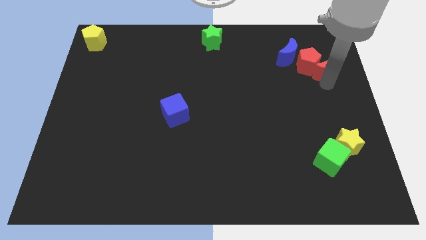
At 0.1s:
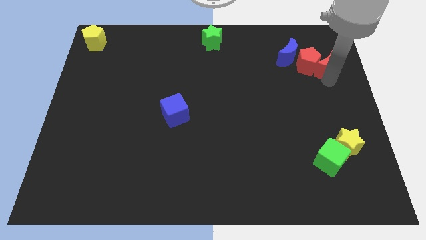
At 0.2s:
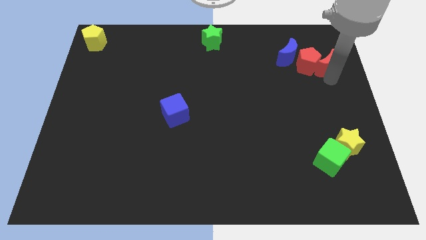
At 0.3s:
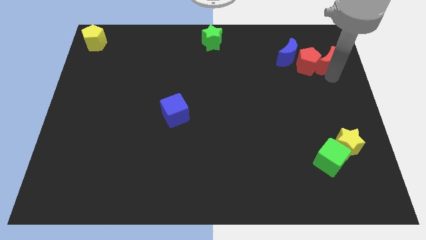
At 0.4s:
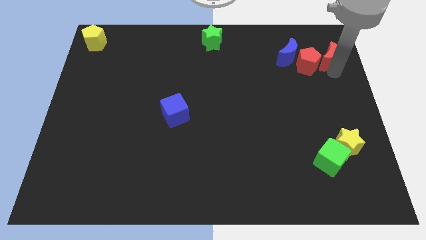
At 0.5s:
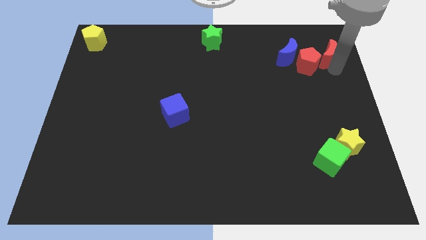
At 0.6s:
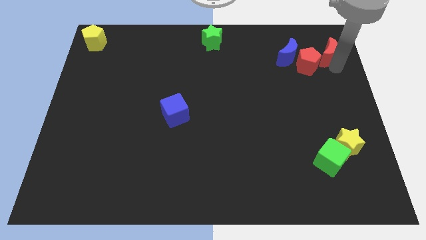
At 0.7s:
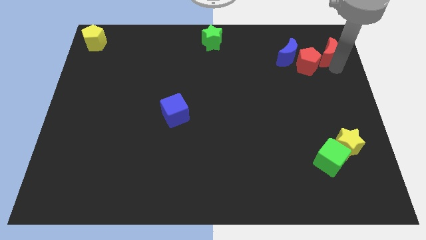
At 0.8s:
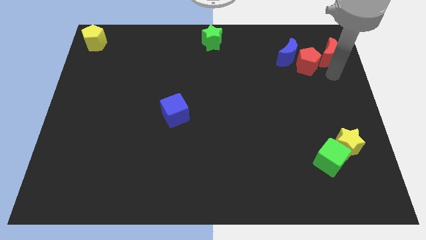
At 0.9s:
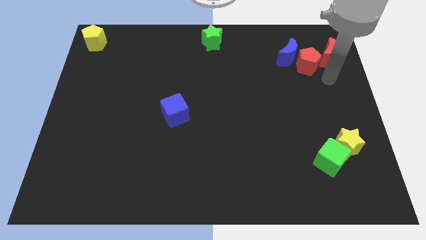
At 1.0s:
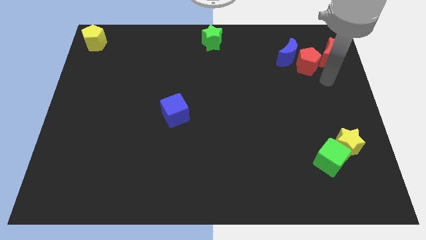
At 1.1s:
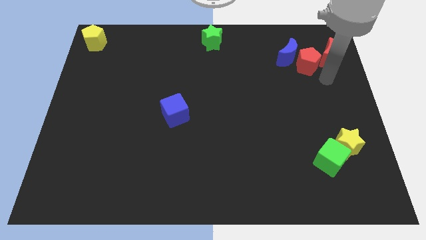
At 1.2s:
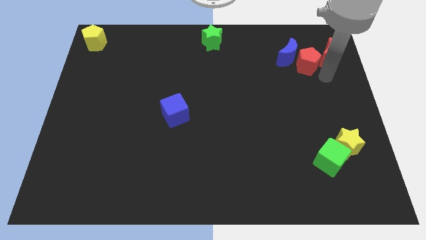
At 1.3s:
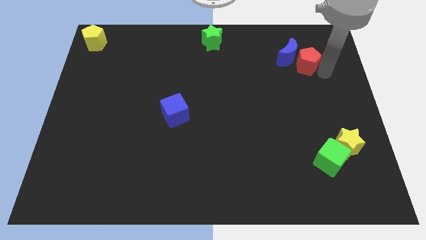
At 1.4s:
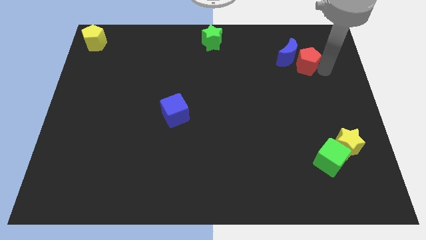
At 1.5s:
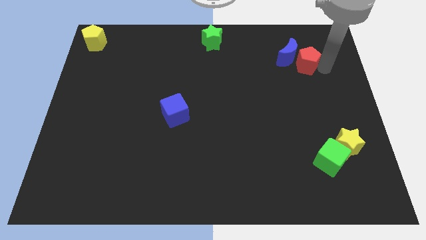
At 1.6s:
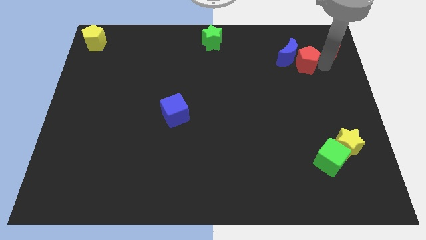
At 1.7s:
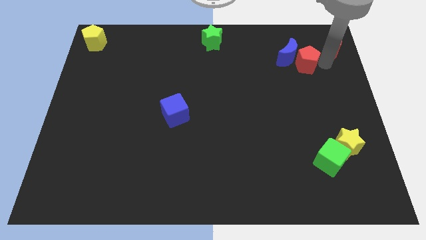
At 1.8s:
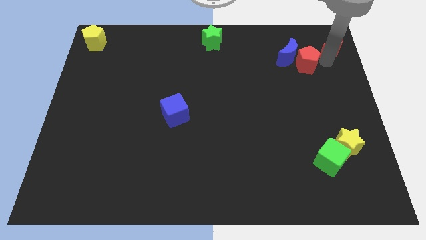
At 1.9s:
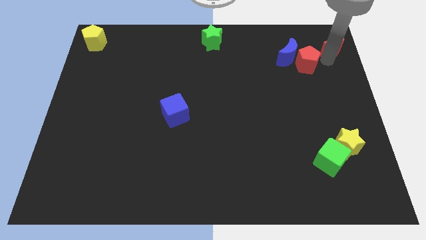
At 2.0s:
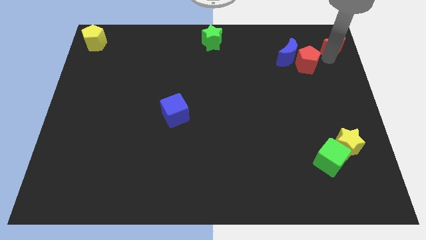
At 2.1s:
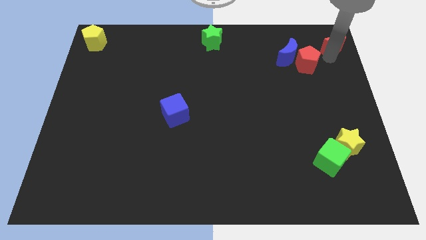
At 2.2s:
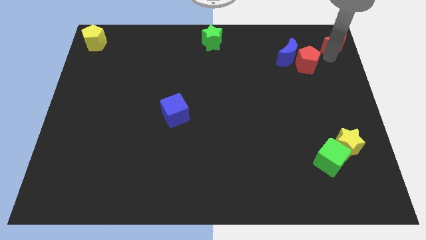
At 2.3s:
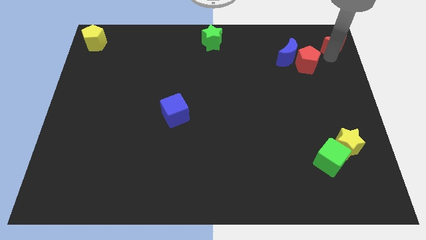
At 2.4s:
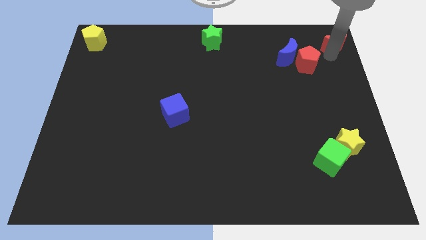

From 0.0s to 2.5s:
move red crescent towards the top right corner of the board

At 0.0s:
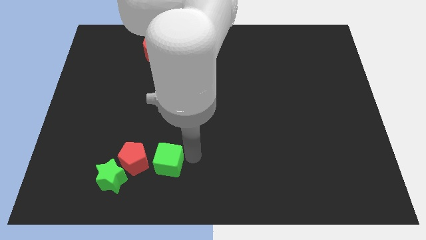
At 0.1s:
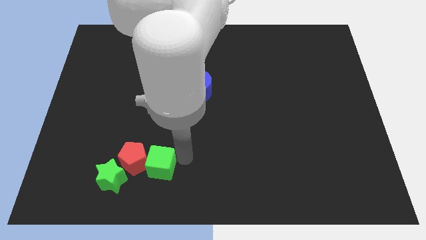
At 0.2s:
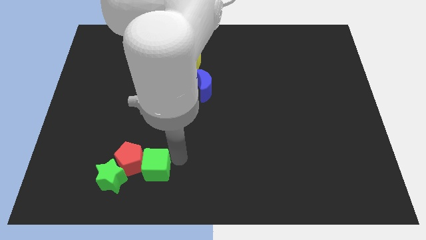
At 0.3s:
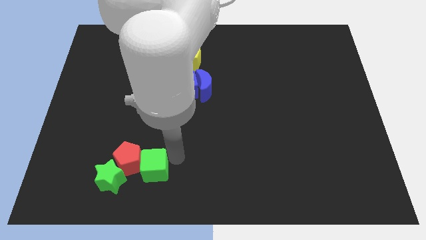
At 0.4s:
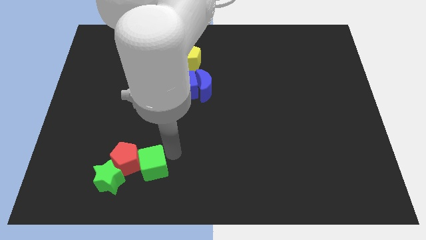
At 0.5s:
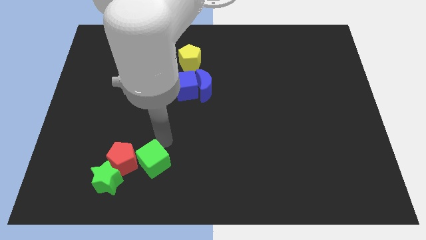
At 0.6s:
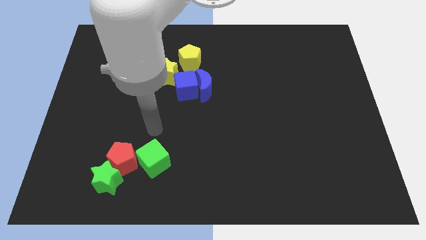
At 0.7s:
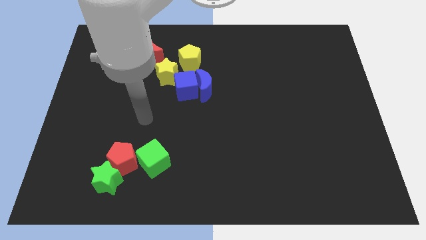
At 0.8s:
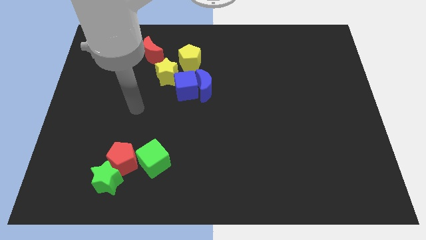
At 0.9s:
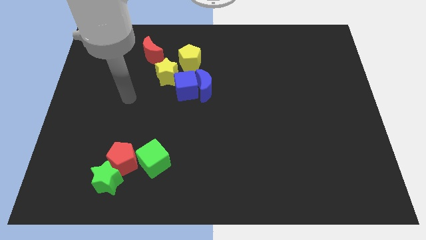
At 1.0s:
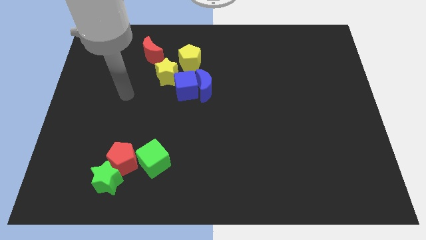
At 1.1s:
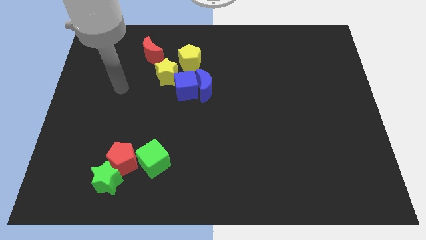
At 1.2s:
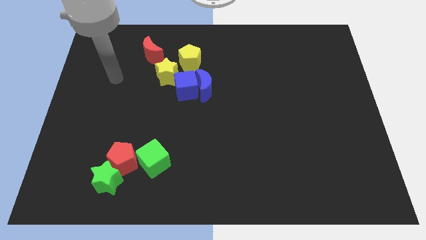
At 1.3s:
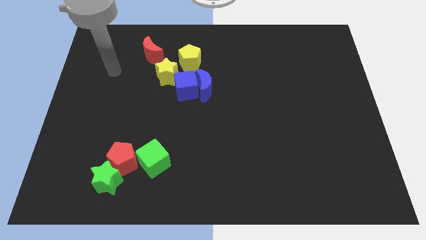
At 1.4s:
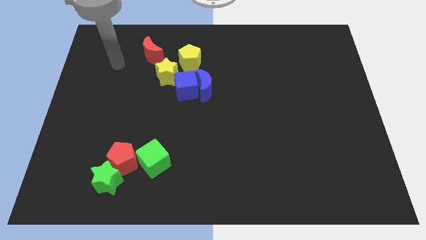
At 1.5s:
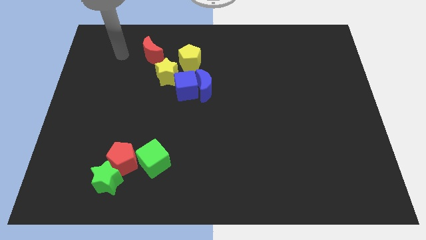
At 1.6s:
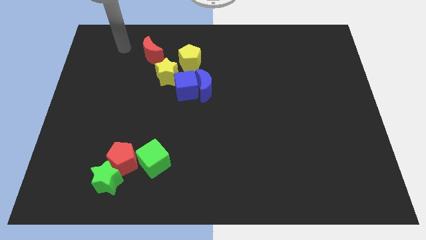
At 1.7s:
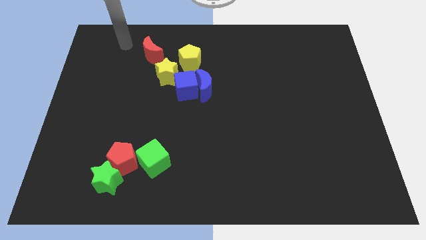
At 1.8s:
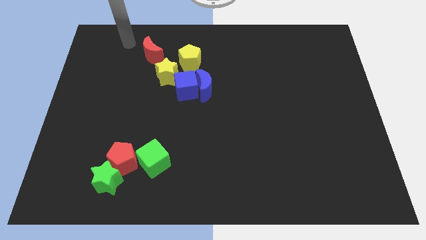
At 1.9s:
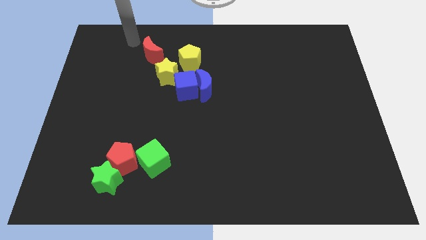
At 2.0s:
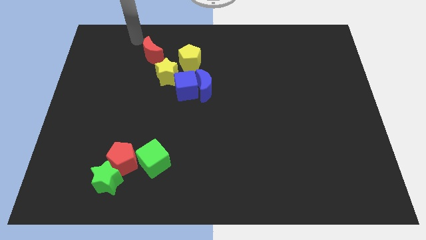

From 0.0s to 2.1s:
move the green cube into the red pentagon

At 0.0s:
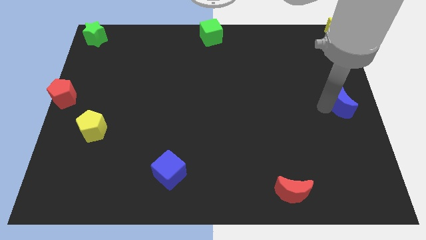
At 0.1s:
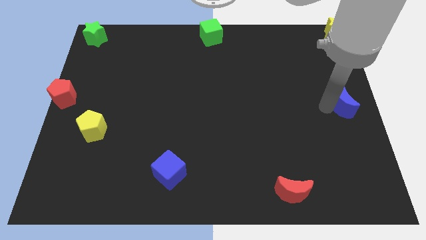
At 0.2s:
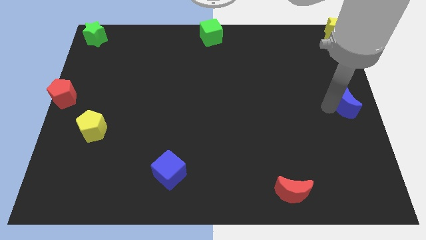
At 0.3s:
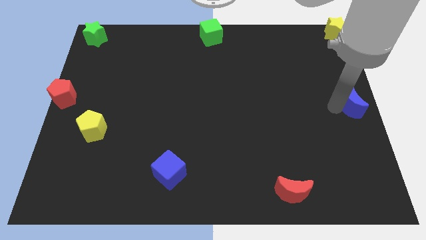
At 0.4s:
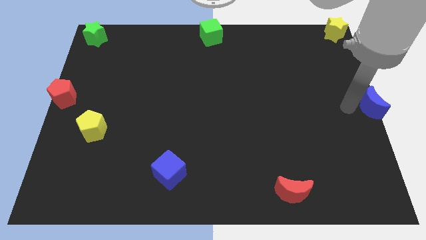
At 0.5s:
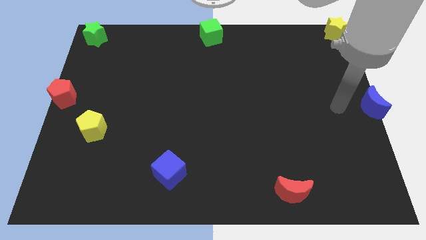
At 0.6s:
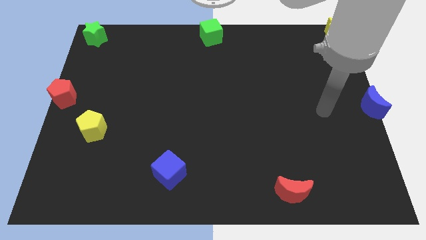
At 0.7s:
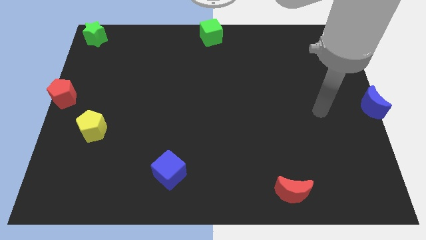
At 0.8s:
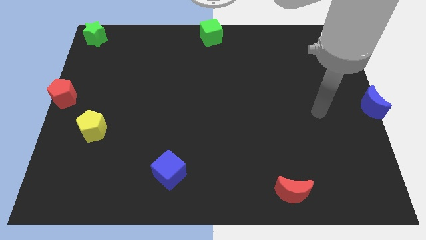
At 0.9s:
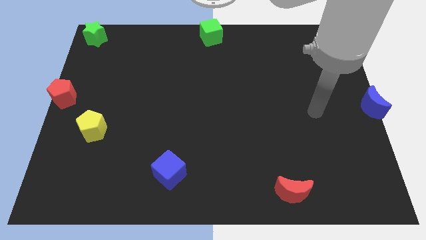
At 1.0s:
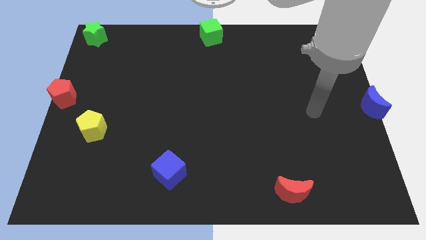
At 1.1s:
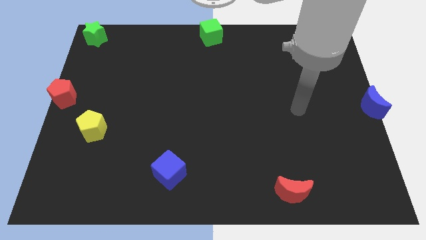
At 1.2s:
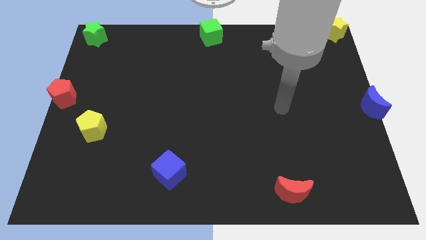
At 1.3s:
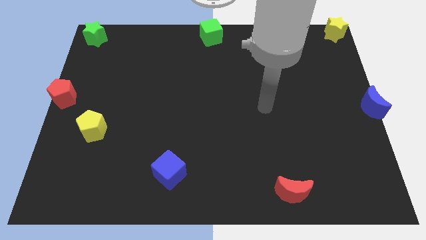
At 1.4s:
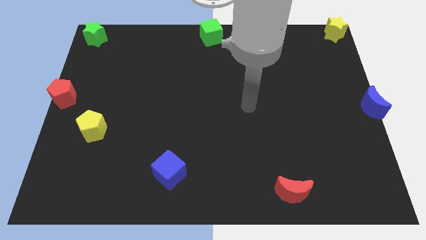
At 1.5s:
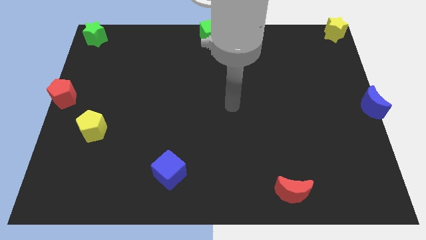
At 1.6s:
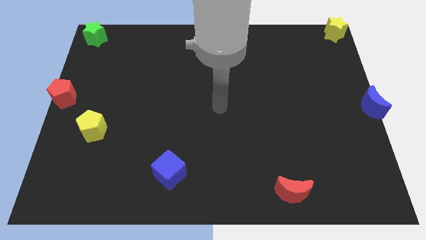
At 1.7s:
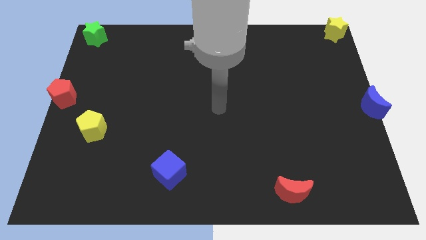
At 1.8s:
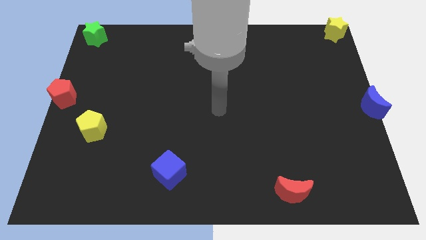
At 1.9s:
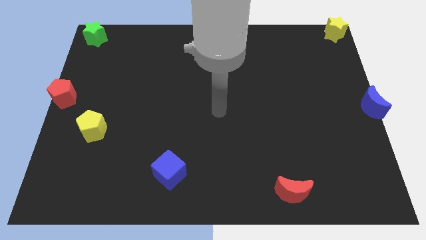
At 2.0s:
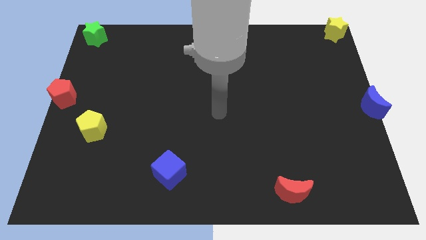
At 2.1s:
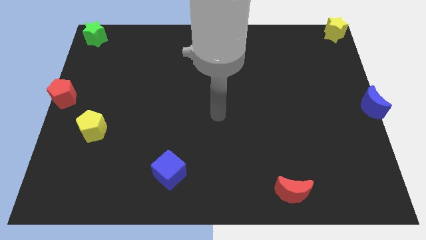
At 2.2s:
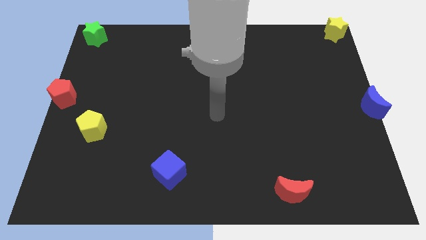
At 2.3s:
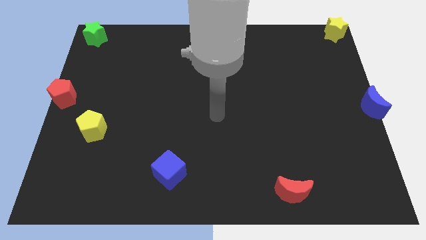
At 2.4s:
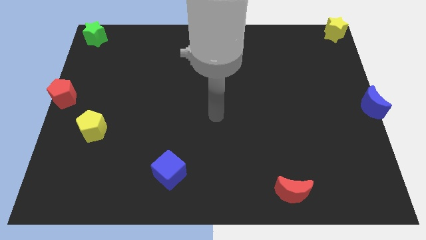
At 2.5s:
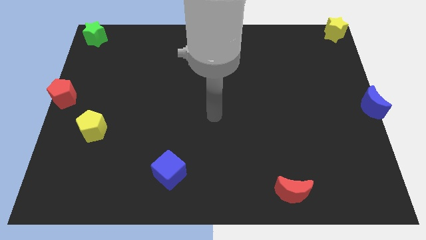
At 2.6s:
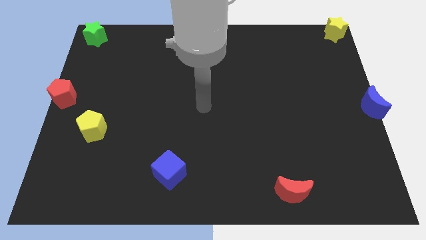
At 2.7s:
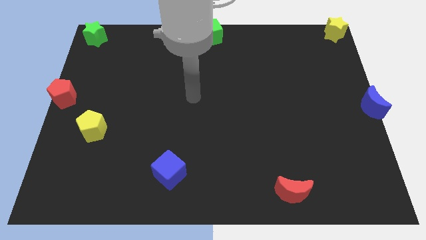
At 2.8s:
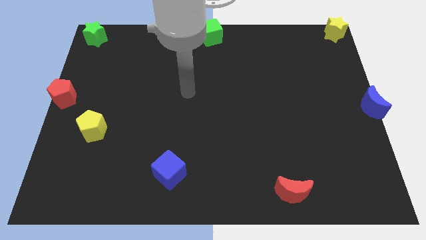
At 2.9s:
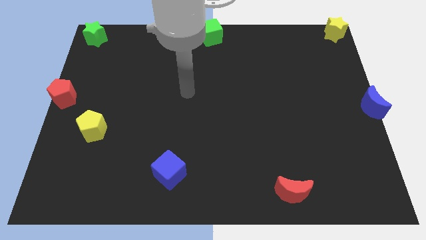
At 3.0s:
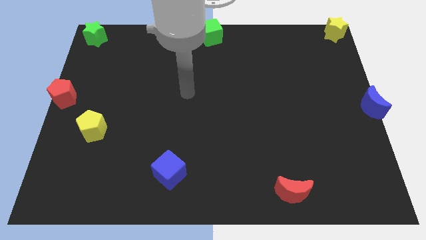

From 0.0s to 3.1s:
place the blue moon at the center right corner

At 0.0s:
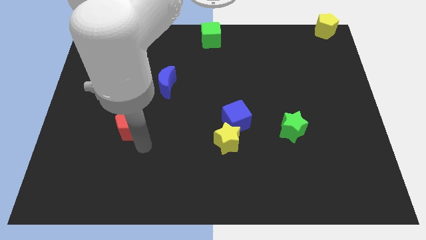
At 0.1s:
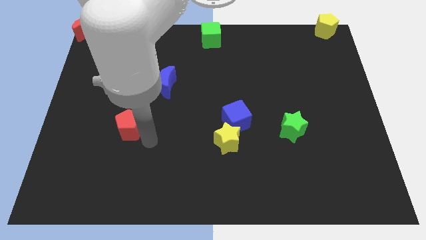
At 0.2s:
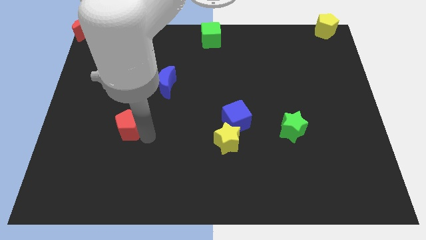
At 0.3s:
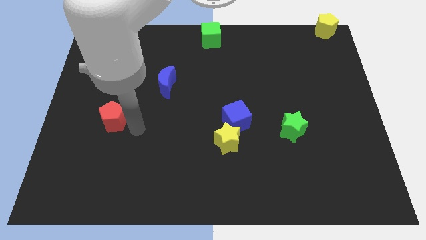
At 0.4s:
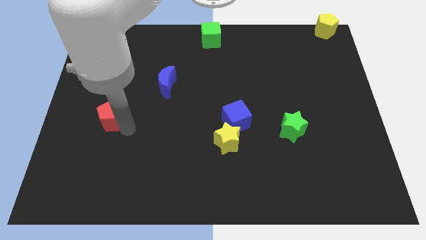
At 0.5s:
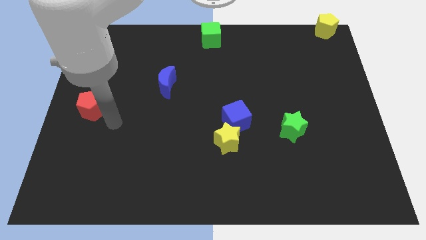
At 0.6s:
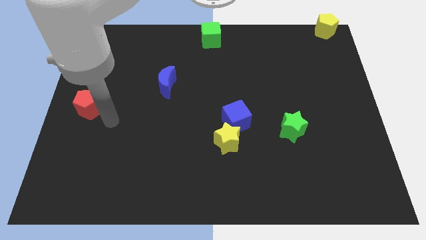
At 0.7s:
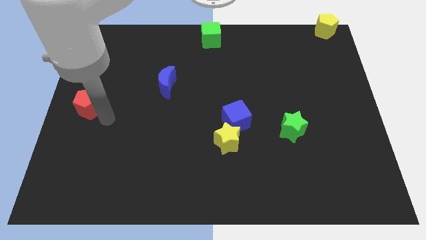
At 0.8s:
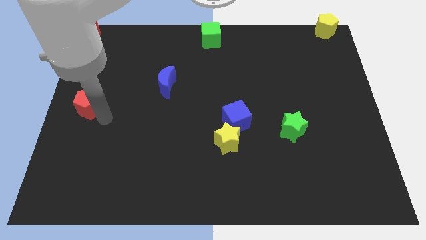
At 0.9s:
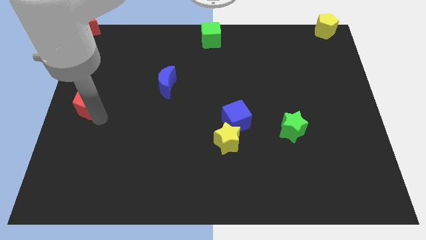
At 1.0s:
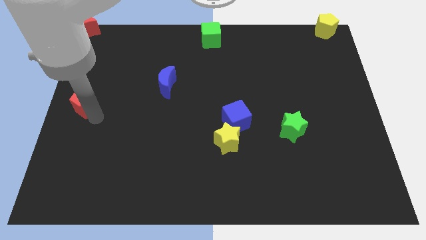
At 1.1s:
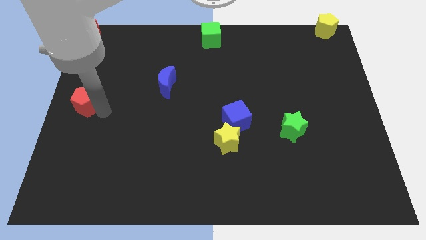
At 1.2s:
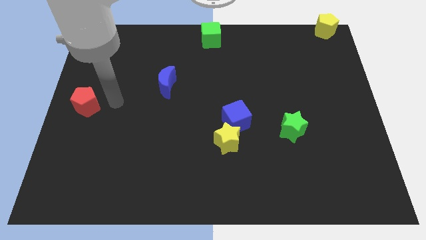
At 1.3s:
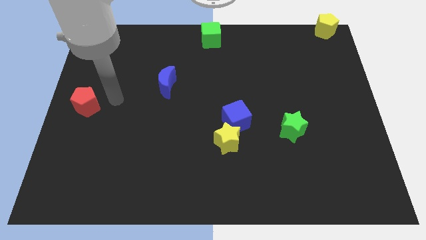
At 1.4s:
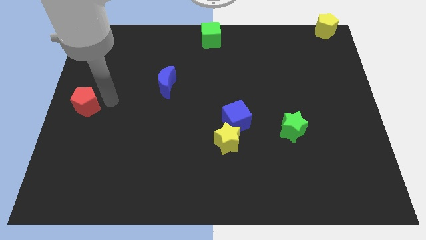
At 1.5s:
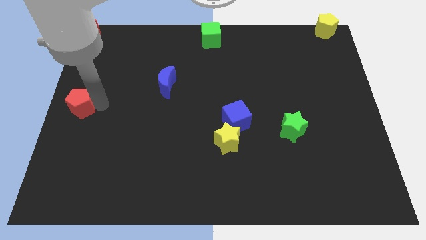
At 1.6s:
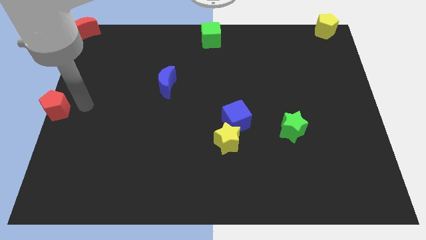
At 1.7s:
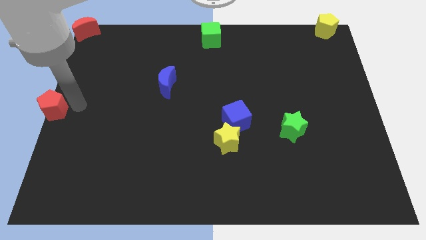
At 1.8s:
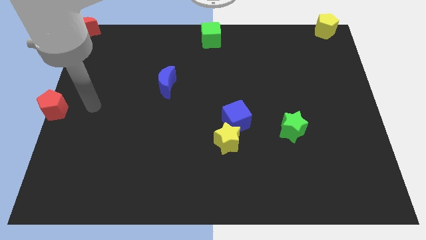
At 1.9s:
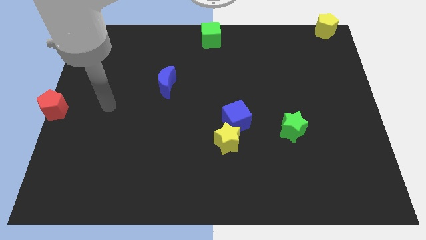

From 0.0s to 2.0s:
place the red pentagon to the left center of the board
